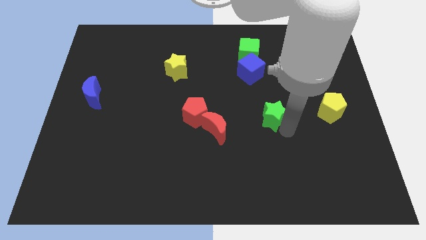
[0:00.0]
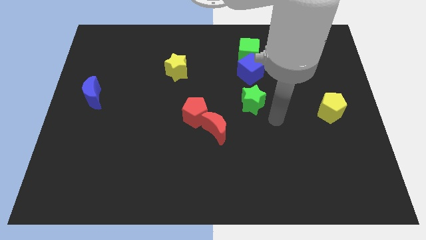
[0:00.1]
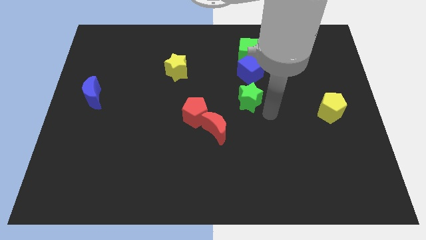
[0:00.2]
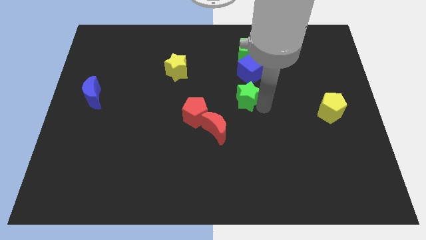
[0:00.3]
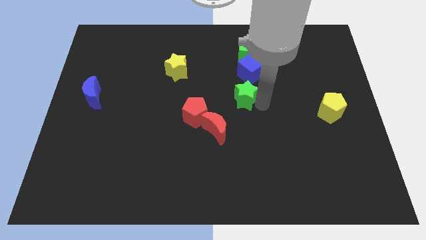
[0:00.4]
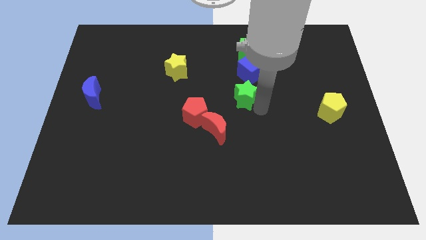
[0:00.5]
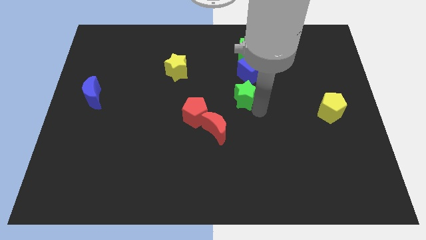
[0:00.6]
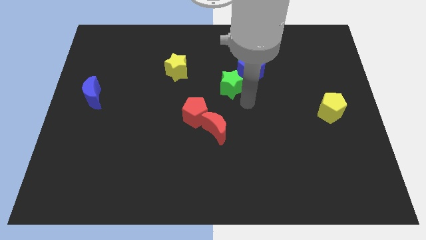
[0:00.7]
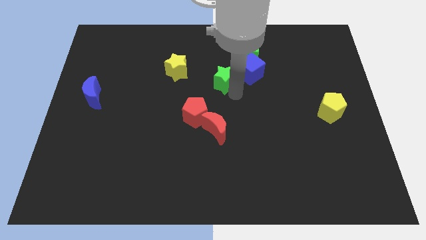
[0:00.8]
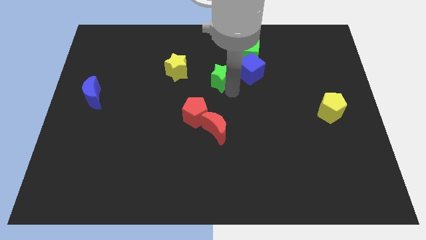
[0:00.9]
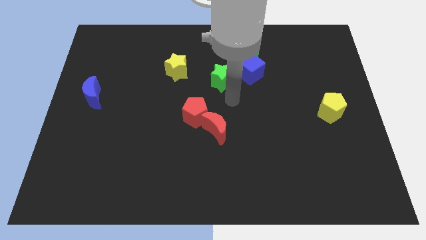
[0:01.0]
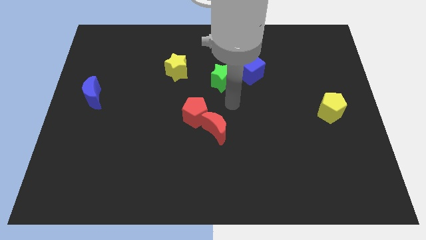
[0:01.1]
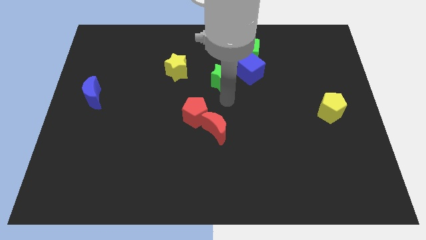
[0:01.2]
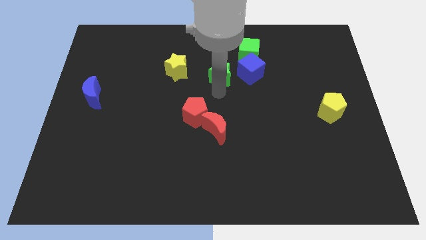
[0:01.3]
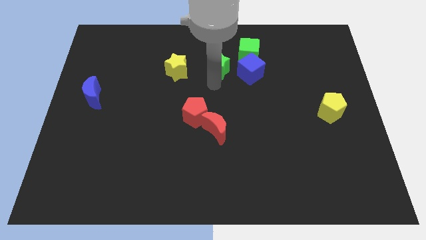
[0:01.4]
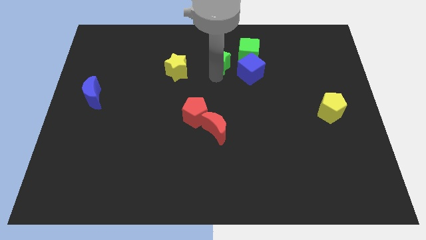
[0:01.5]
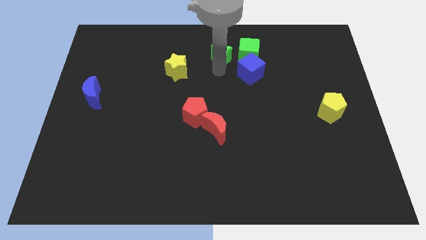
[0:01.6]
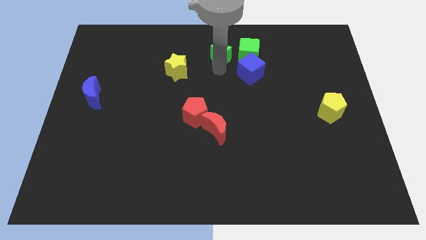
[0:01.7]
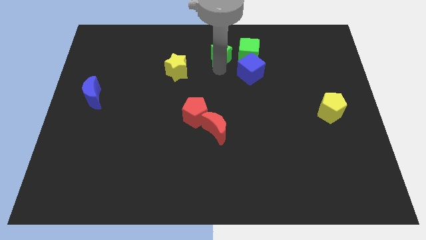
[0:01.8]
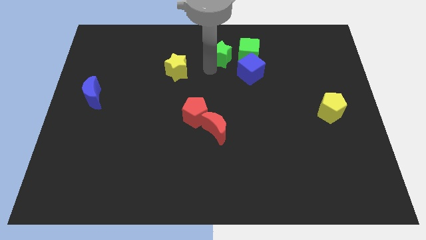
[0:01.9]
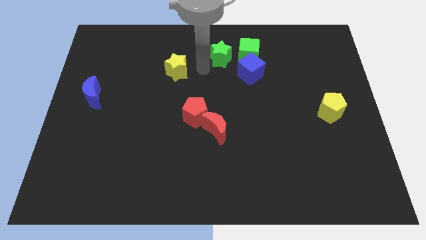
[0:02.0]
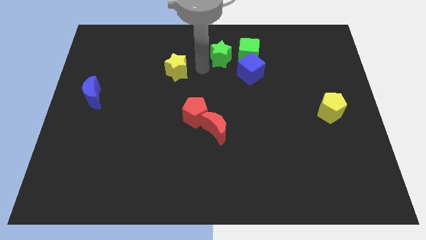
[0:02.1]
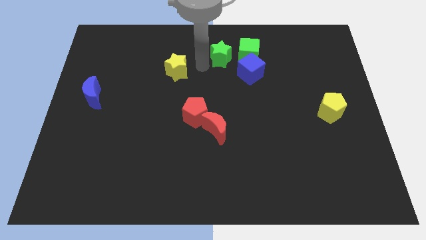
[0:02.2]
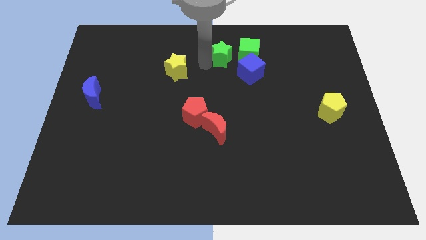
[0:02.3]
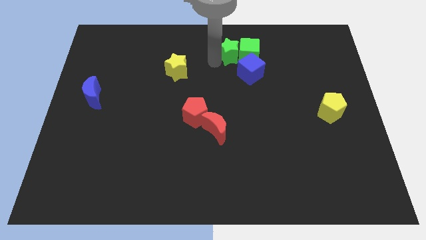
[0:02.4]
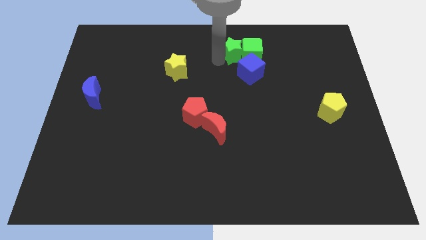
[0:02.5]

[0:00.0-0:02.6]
move the green star left to the green cube

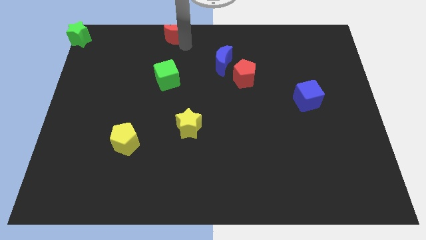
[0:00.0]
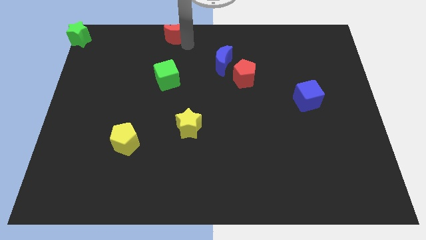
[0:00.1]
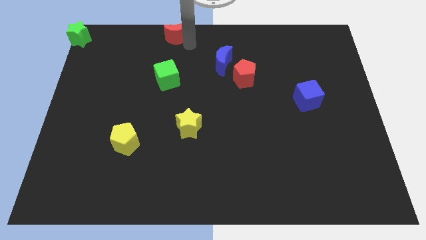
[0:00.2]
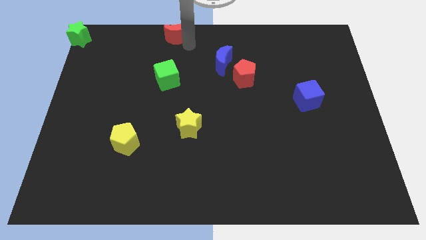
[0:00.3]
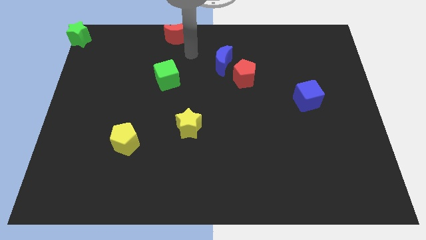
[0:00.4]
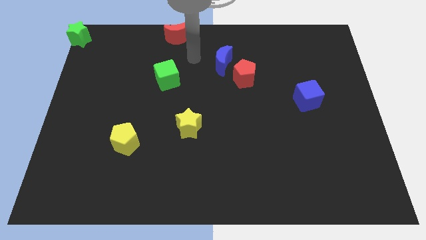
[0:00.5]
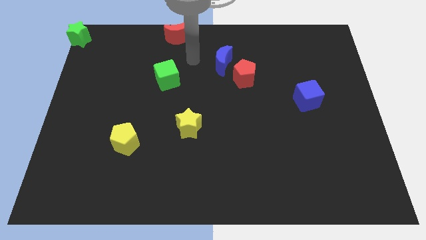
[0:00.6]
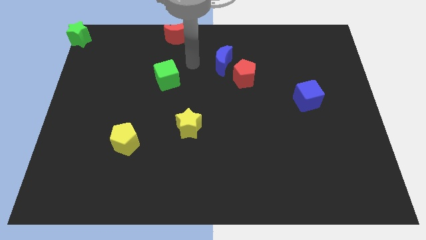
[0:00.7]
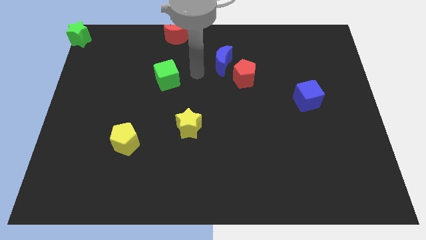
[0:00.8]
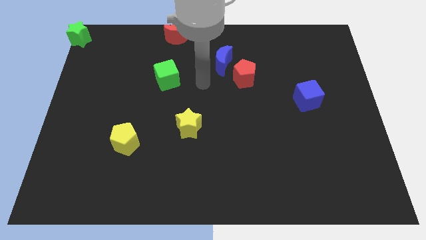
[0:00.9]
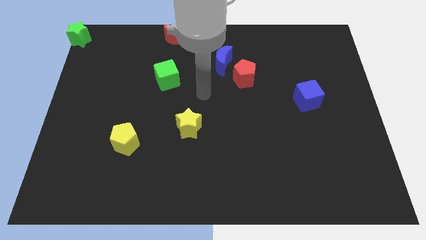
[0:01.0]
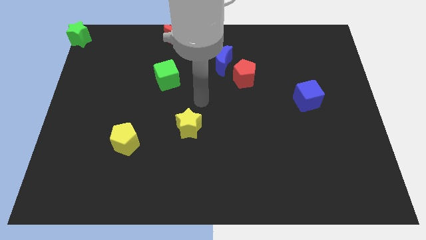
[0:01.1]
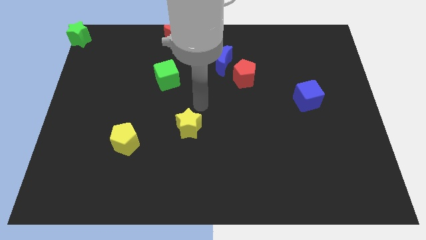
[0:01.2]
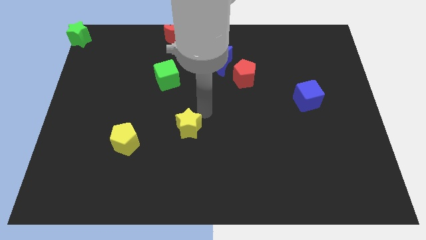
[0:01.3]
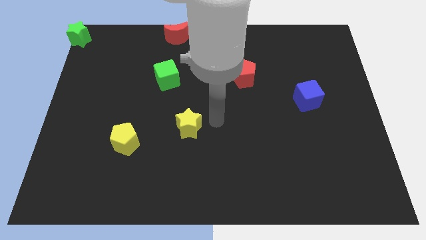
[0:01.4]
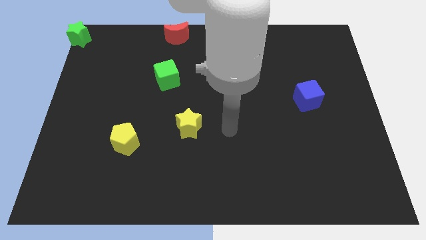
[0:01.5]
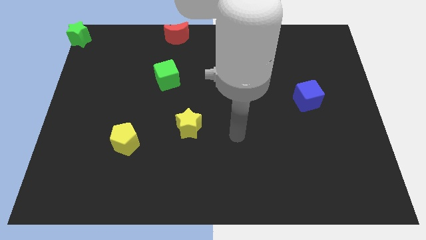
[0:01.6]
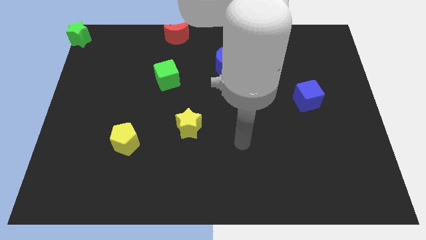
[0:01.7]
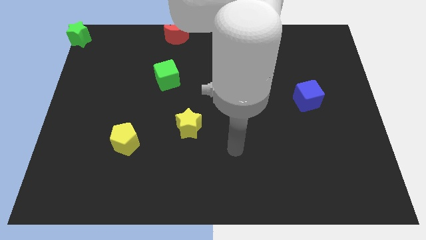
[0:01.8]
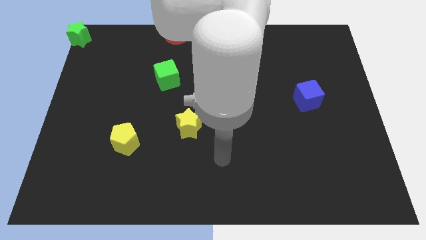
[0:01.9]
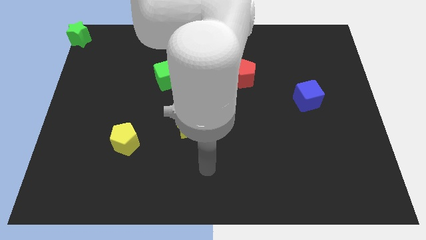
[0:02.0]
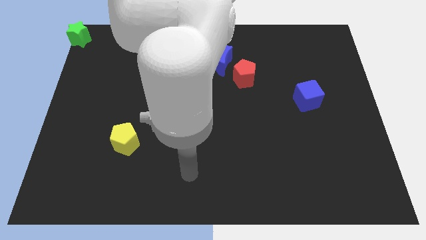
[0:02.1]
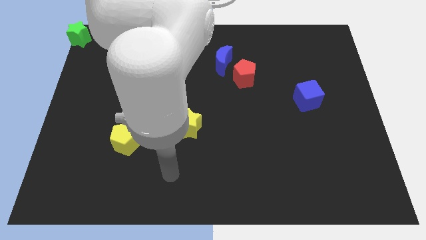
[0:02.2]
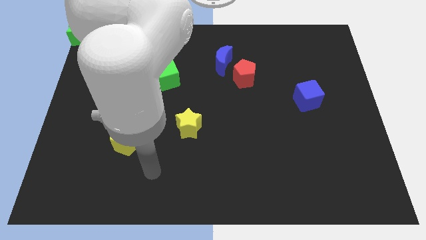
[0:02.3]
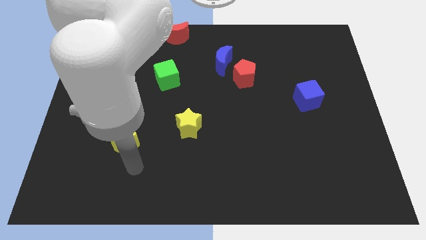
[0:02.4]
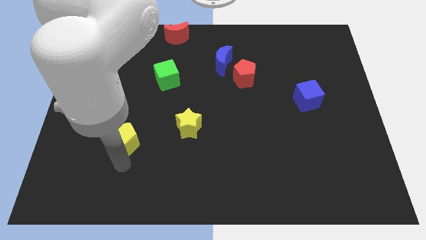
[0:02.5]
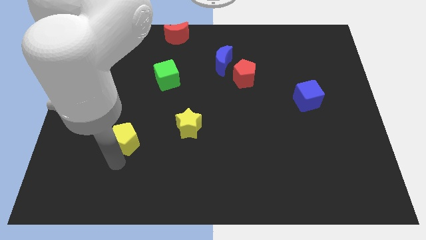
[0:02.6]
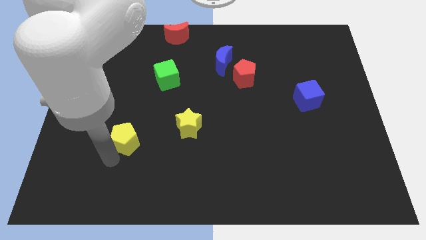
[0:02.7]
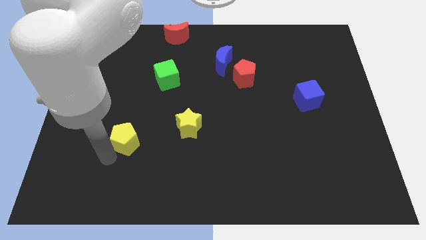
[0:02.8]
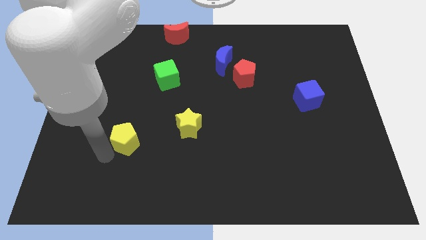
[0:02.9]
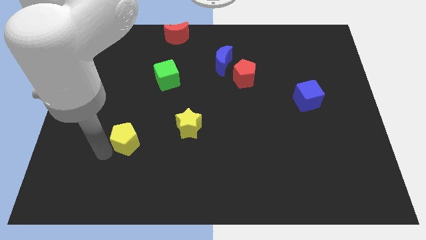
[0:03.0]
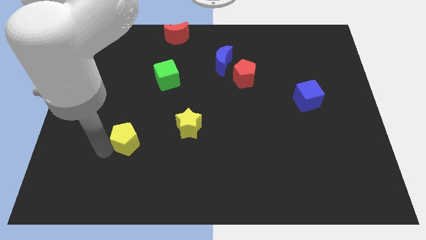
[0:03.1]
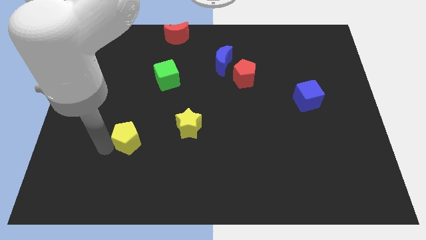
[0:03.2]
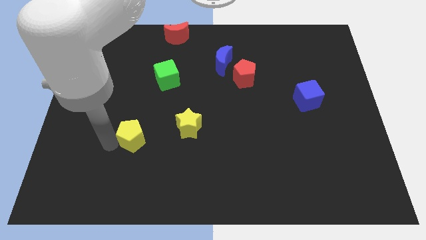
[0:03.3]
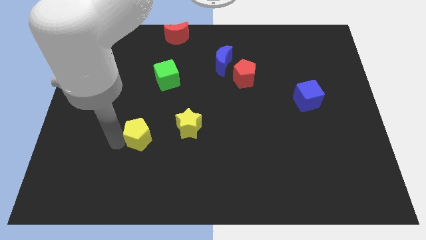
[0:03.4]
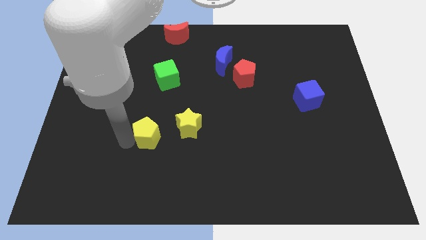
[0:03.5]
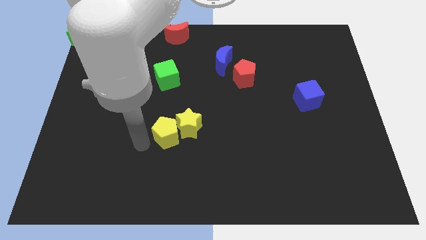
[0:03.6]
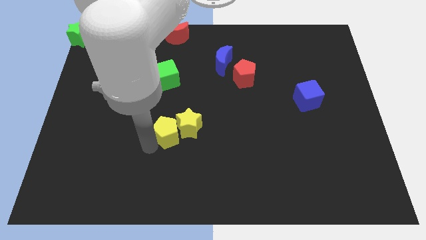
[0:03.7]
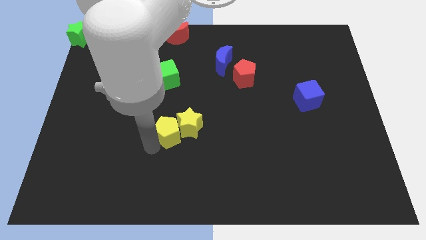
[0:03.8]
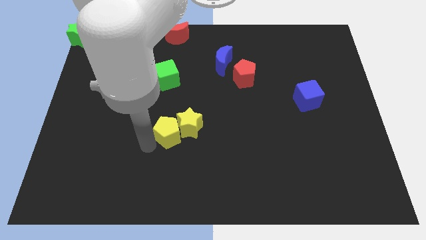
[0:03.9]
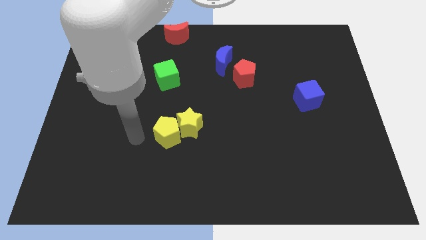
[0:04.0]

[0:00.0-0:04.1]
place yellow pentagon to the bottom of green cube

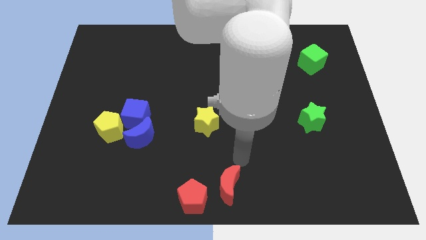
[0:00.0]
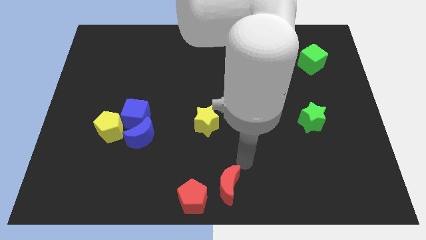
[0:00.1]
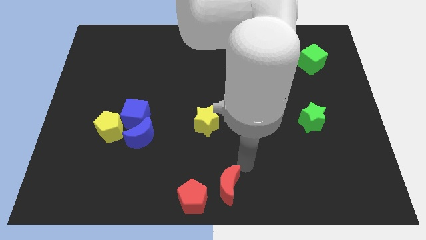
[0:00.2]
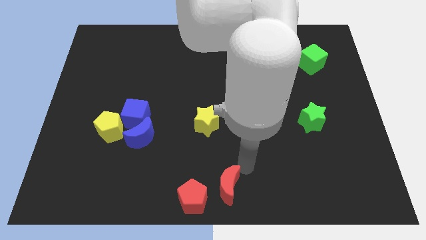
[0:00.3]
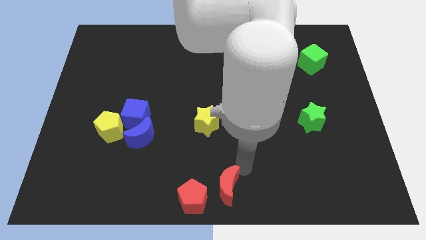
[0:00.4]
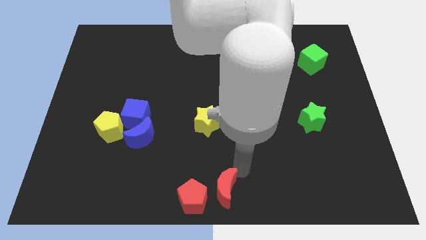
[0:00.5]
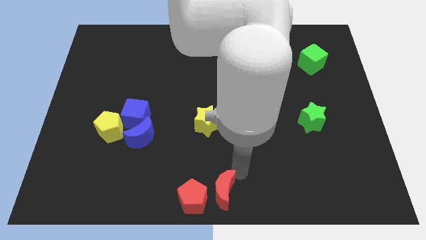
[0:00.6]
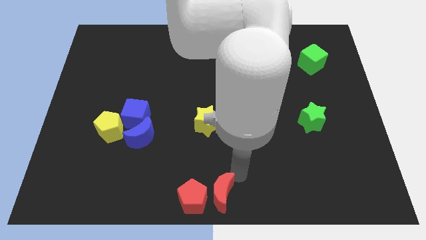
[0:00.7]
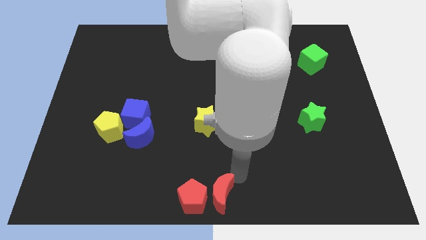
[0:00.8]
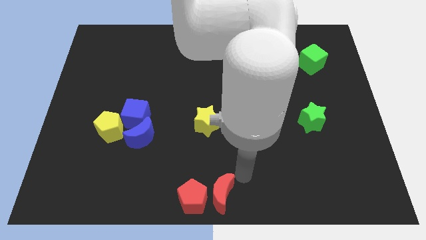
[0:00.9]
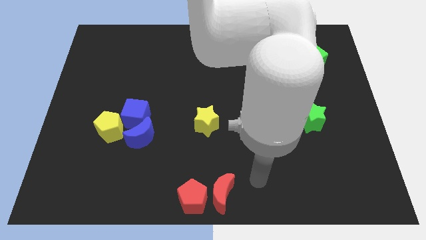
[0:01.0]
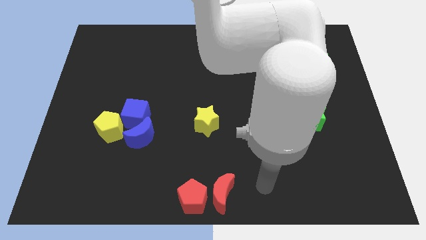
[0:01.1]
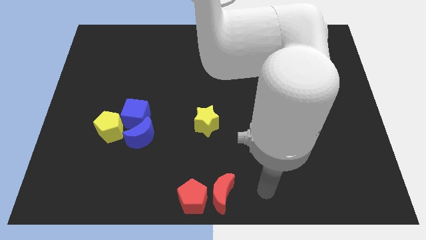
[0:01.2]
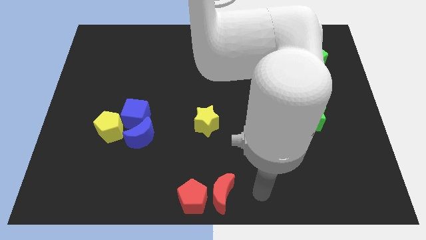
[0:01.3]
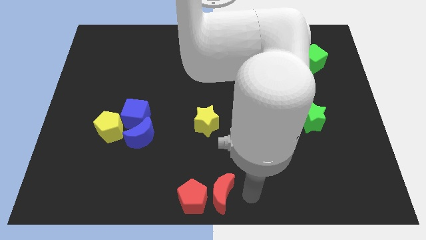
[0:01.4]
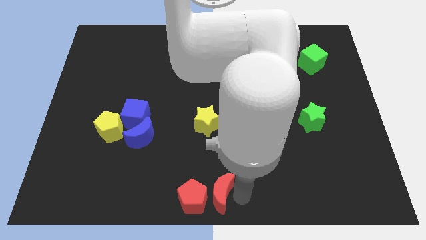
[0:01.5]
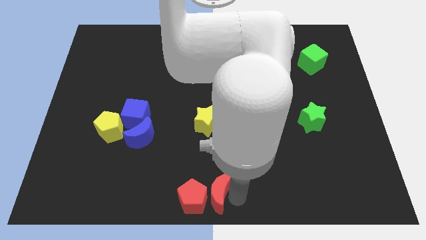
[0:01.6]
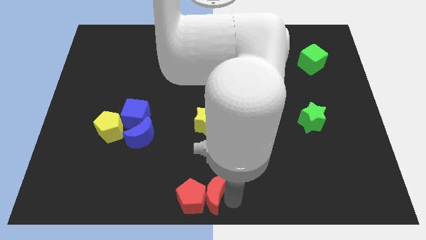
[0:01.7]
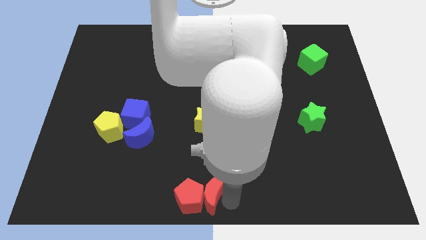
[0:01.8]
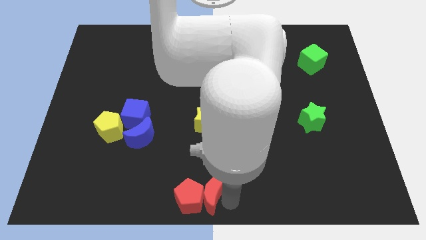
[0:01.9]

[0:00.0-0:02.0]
push the red moon into the red pentagon

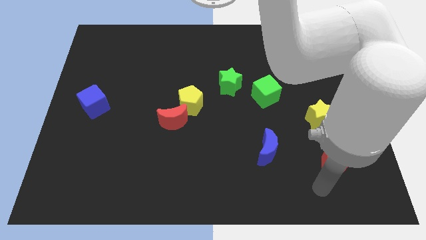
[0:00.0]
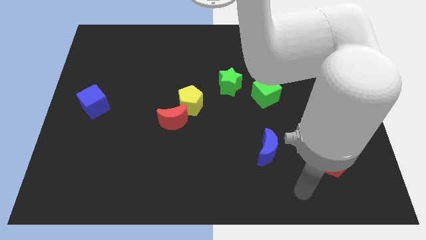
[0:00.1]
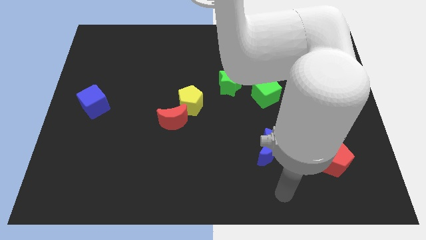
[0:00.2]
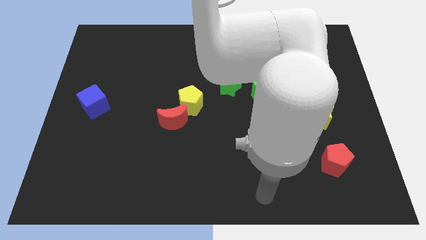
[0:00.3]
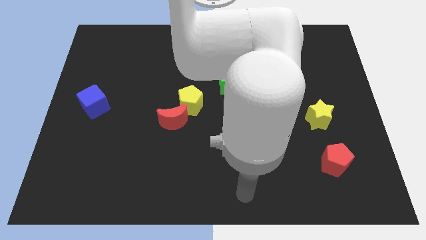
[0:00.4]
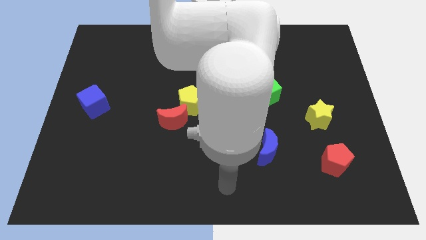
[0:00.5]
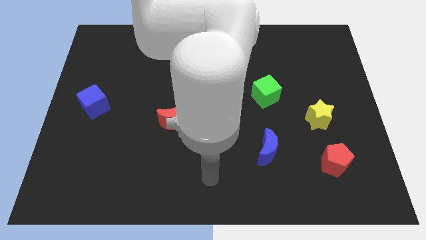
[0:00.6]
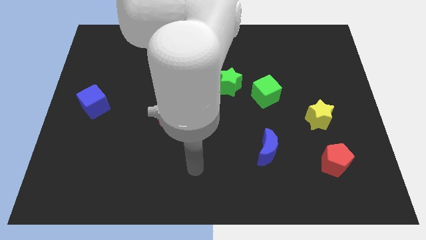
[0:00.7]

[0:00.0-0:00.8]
move the arm away from the red pentagon
